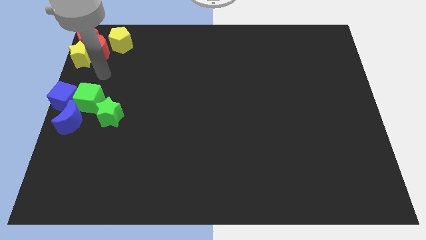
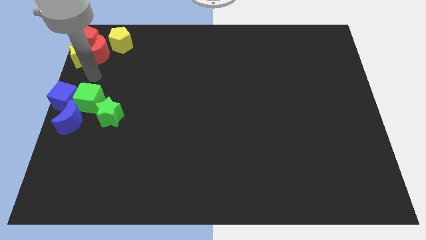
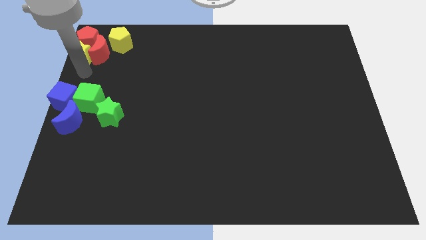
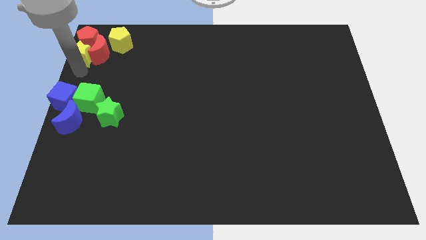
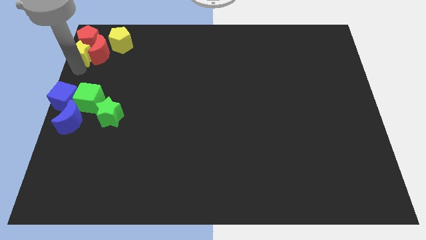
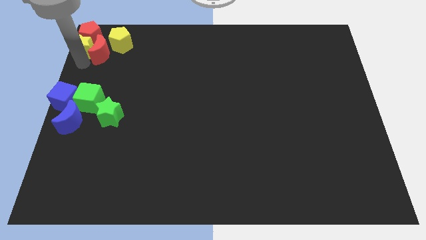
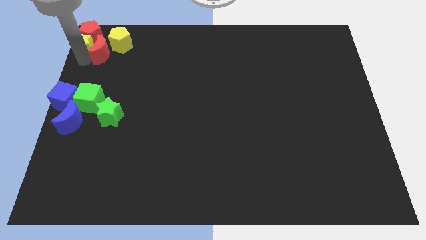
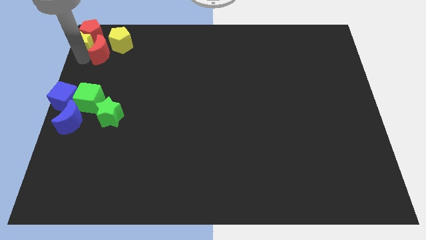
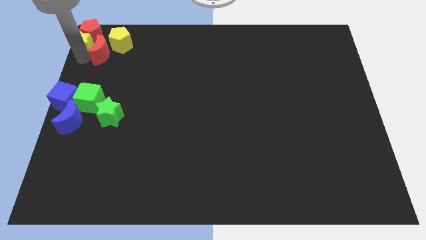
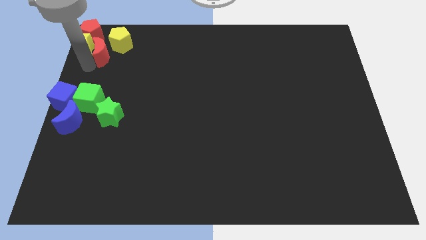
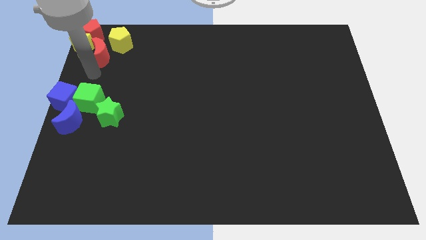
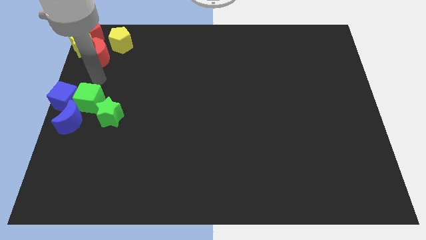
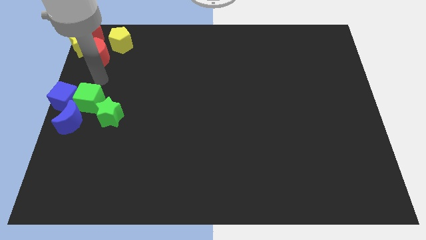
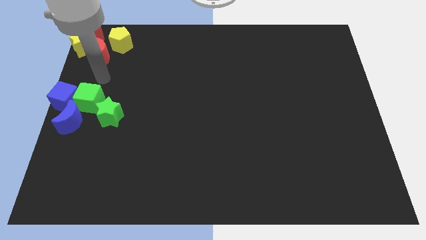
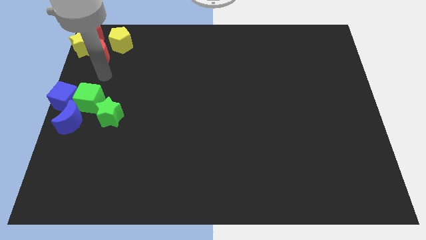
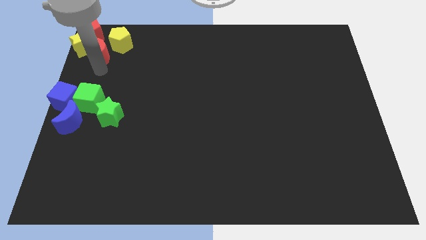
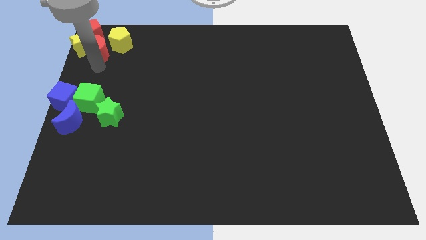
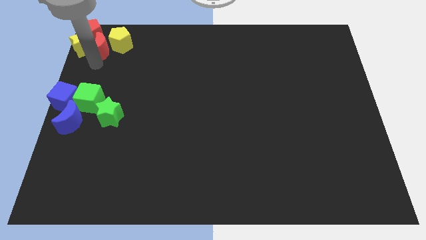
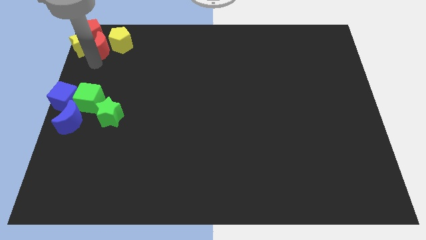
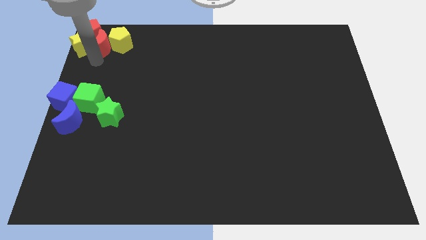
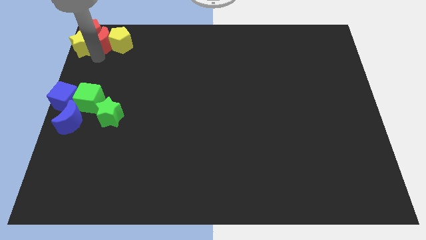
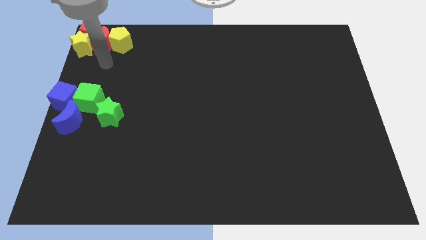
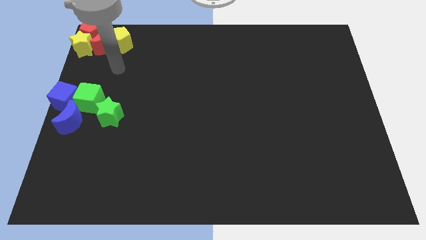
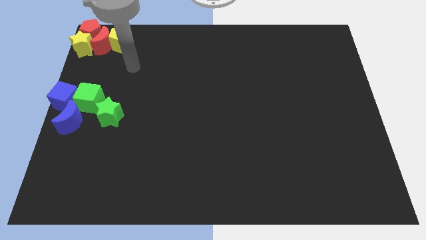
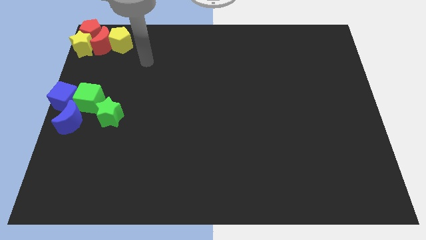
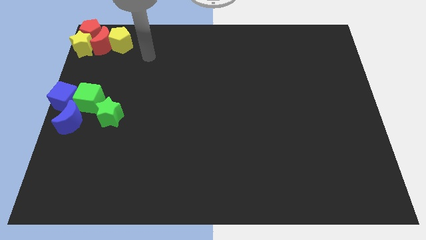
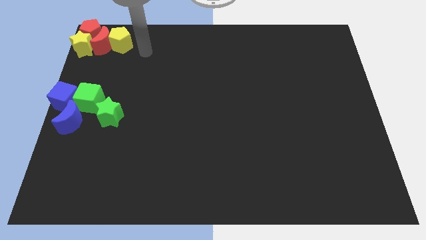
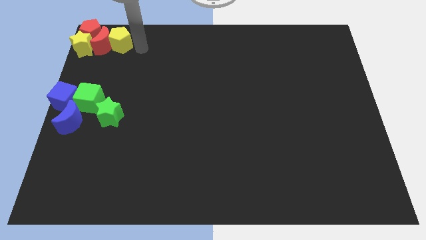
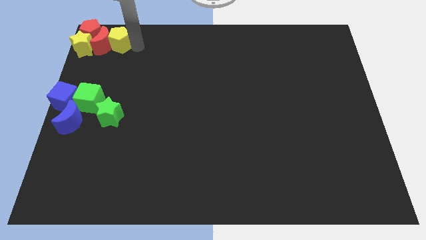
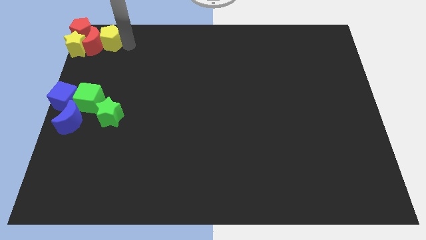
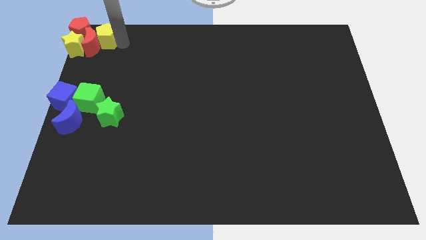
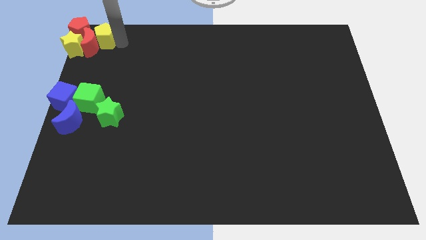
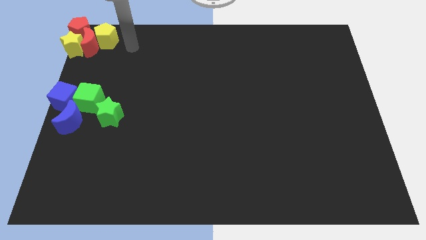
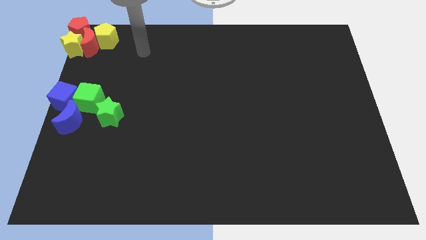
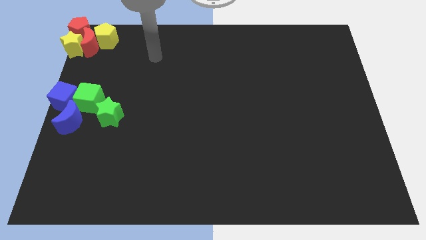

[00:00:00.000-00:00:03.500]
slightly push the red moon and yellow pentagon into the group of object

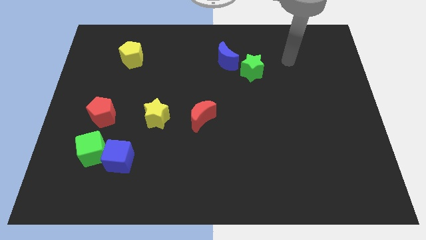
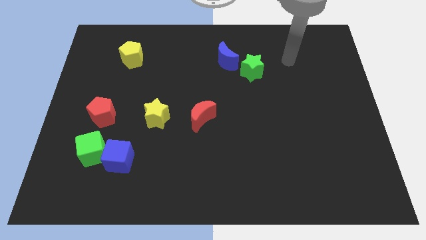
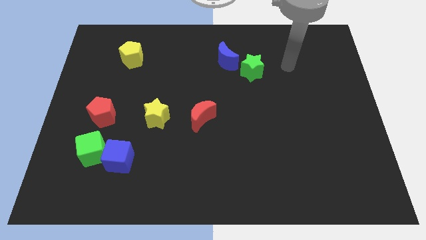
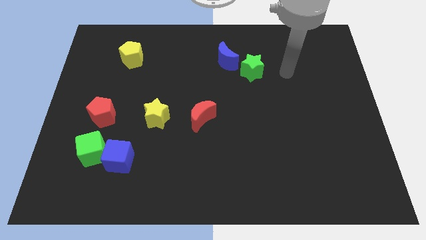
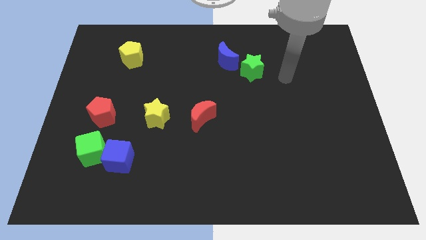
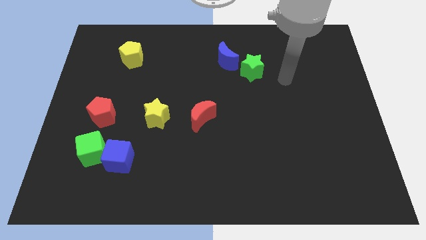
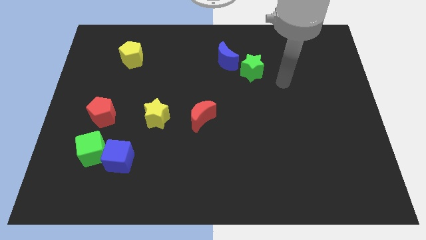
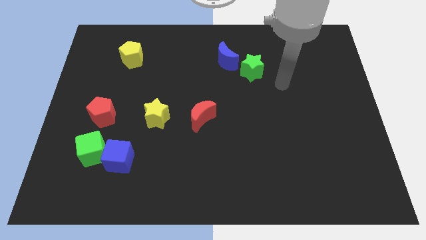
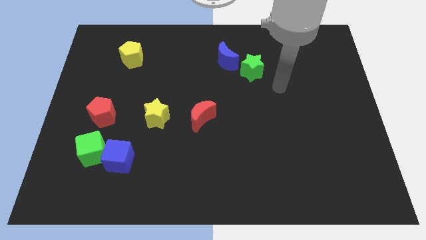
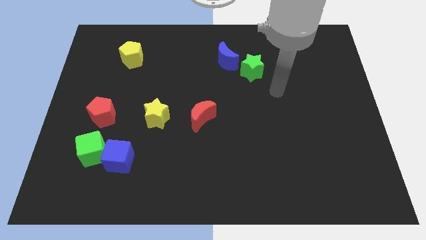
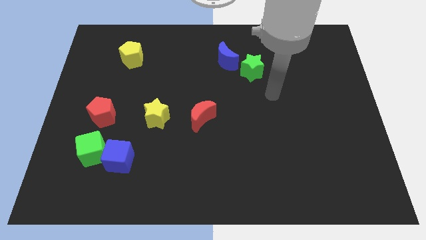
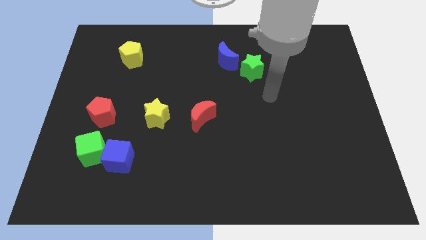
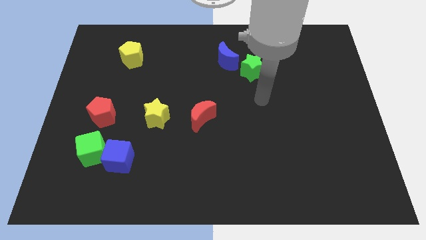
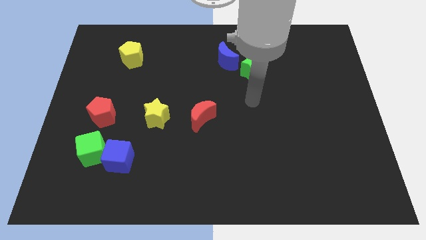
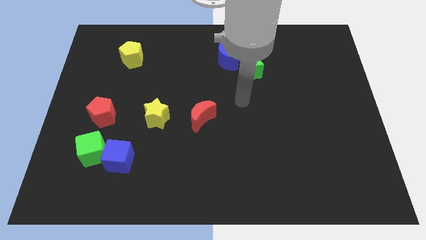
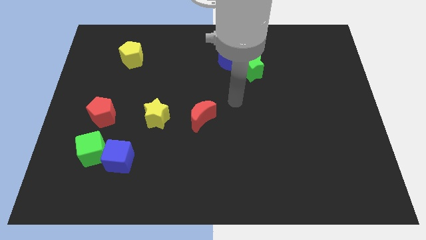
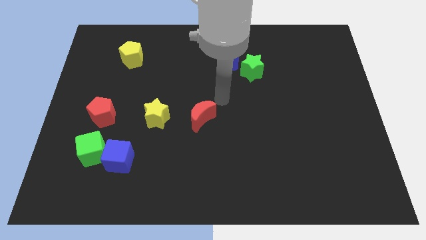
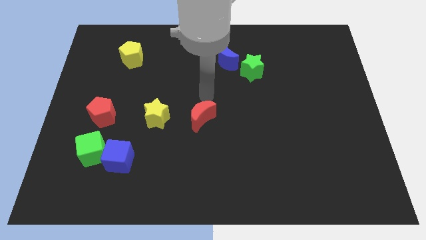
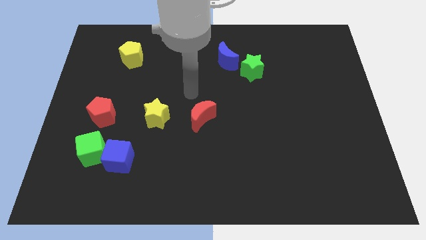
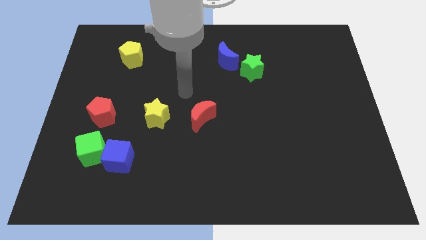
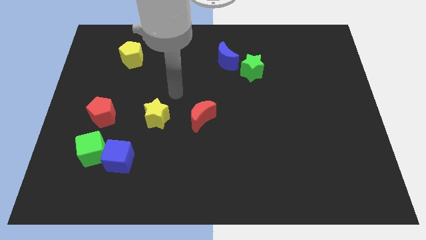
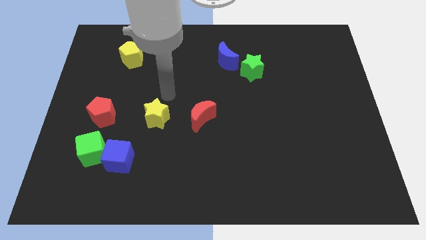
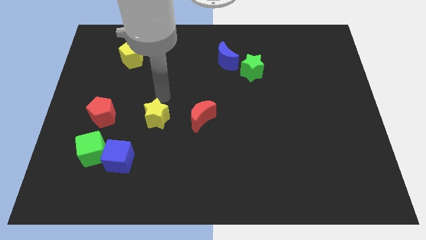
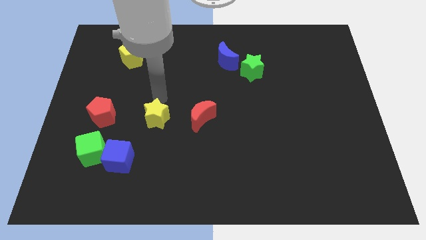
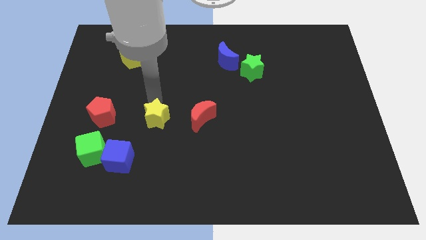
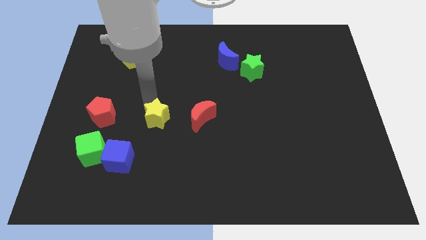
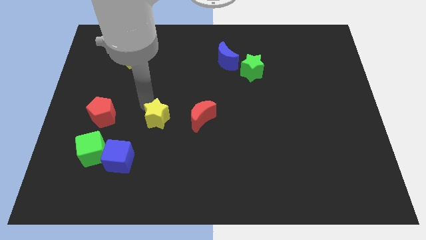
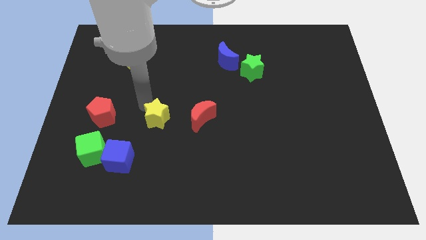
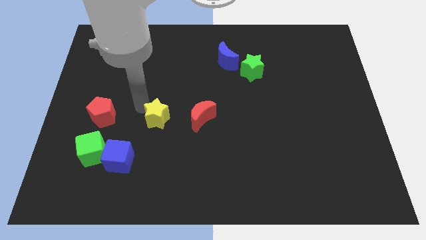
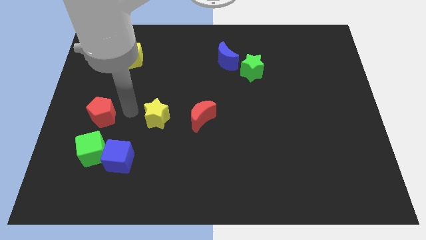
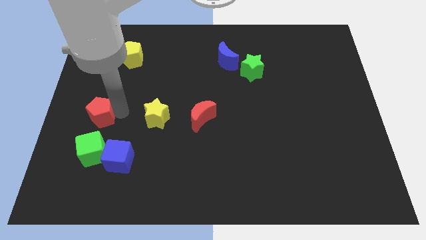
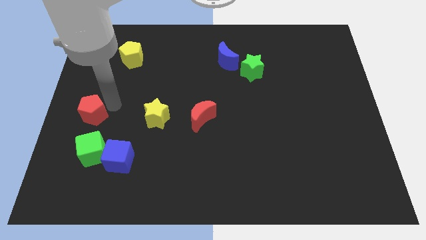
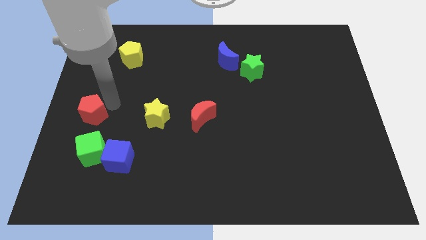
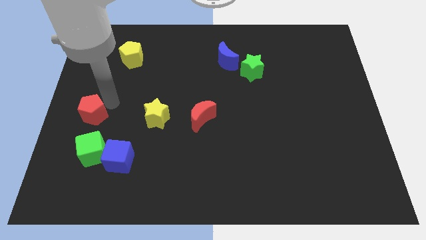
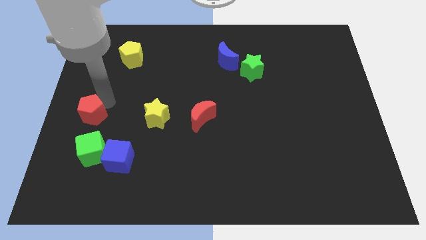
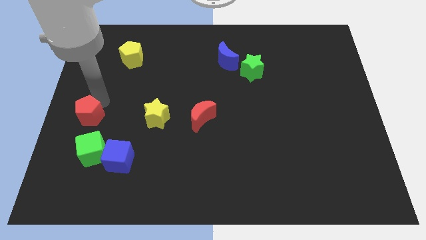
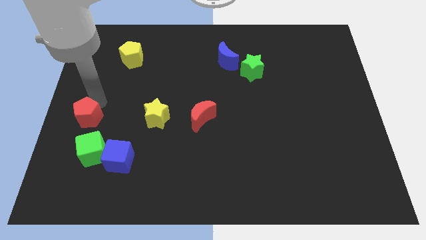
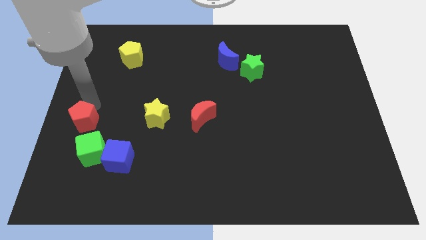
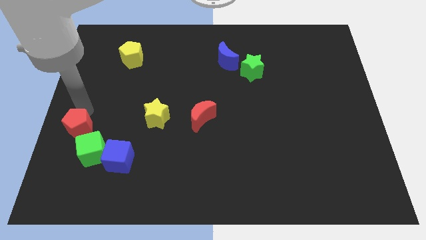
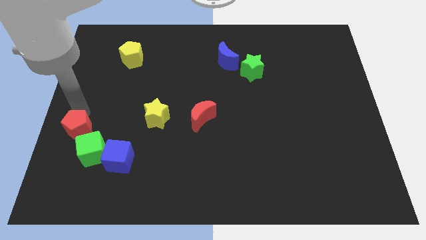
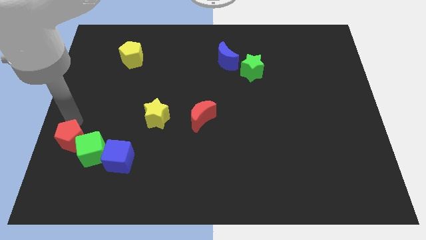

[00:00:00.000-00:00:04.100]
push the red pentagon to the top left side of the green cube

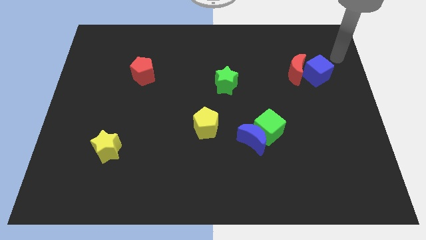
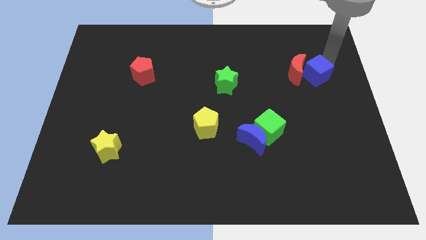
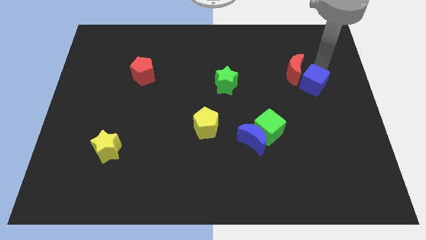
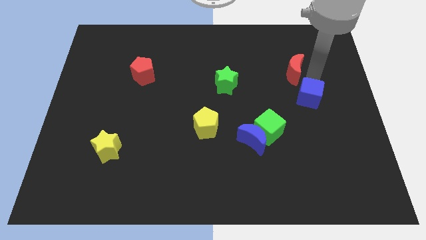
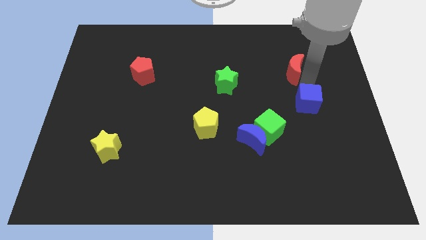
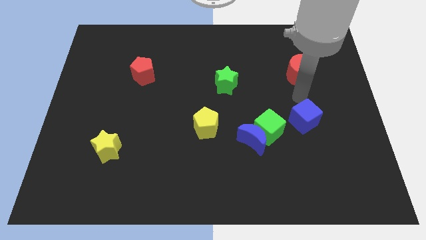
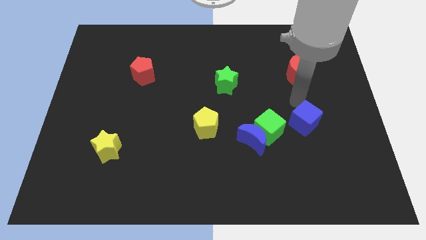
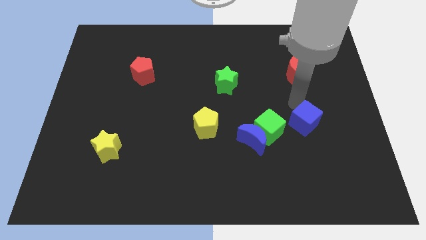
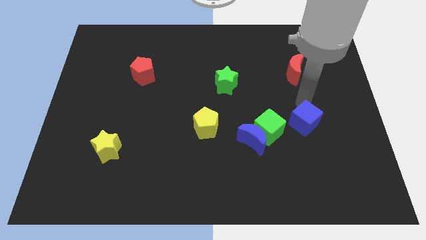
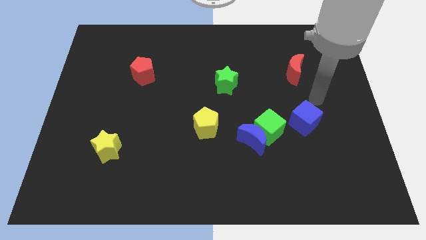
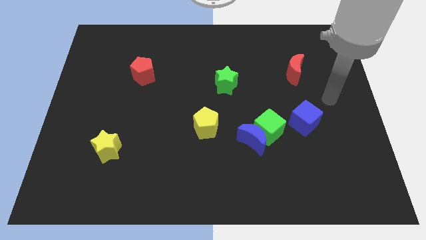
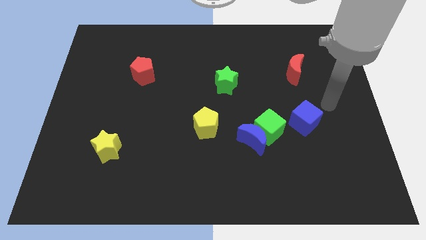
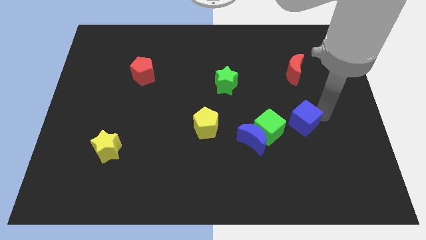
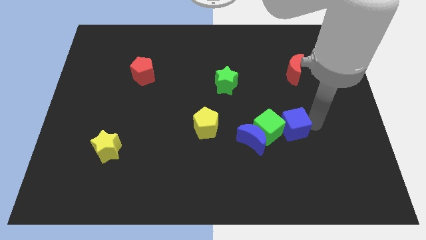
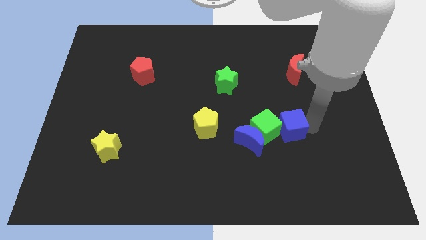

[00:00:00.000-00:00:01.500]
move the blue cube into the green cube

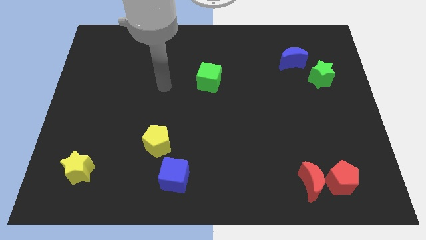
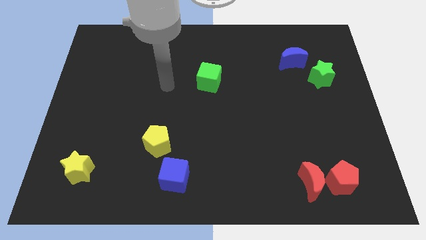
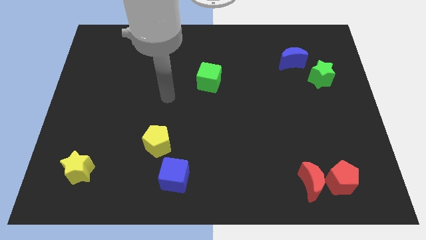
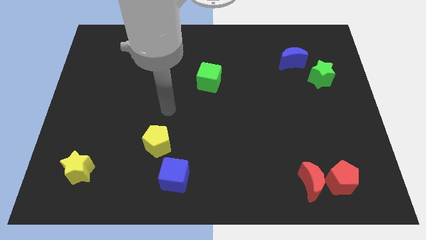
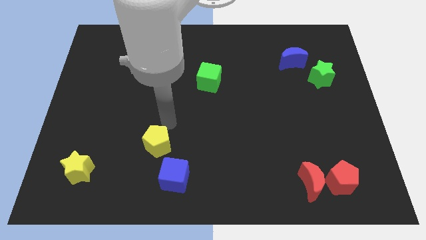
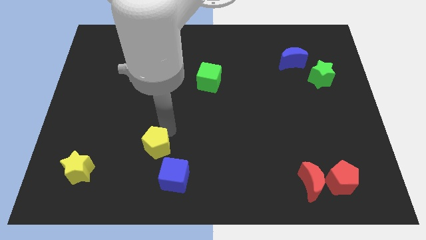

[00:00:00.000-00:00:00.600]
touch the top of yellow penntagon
